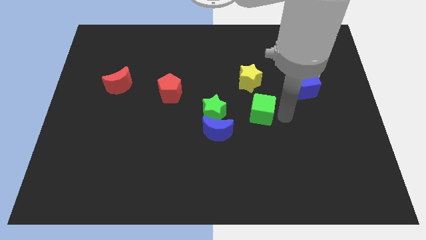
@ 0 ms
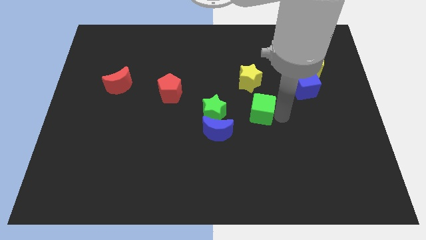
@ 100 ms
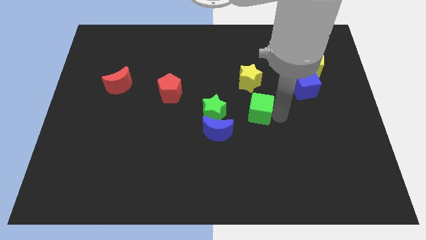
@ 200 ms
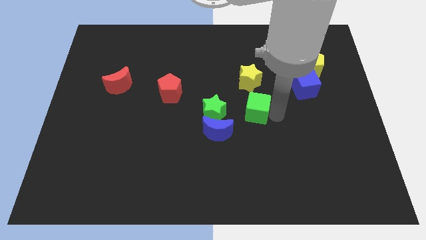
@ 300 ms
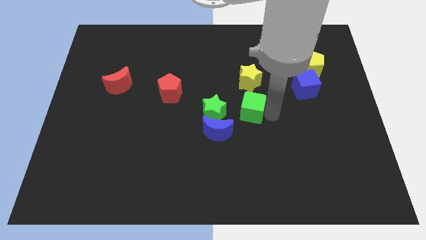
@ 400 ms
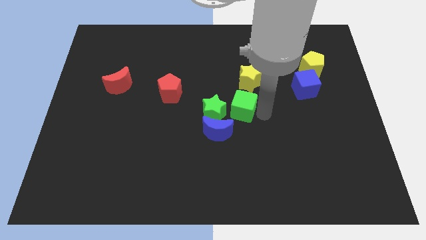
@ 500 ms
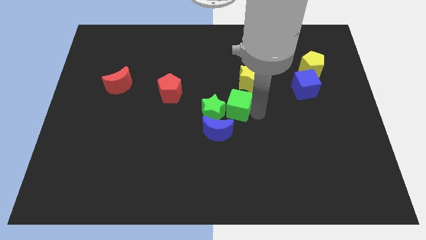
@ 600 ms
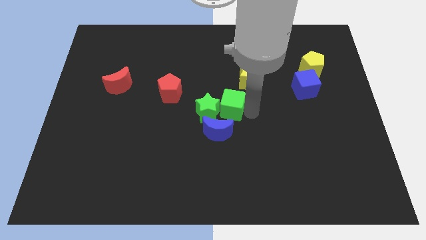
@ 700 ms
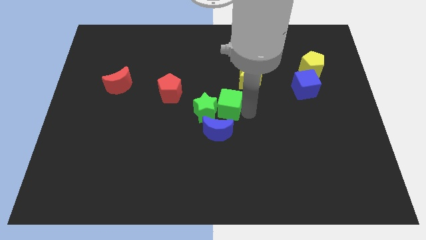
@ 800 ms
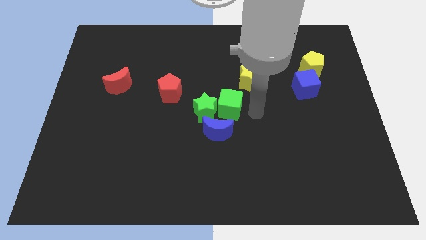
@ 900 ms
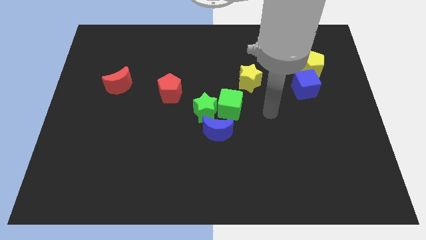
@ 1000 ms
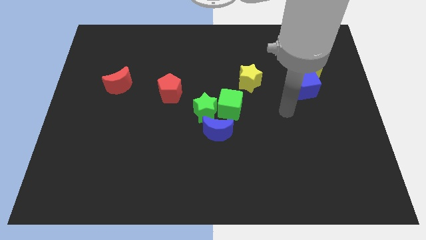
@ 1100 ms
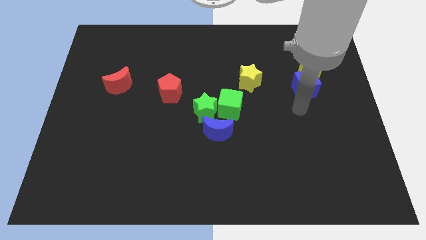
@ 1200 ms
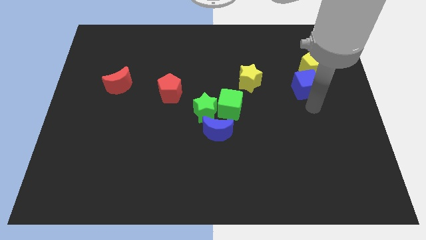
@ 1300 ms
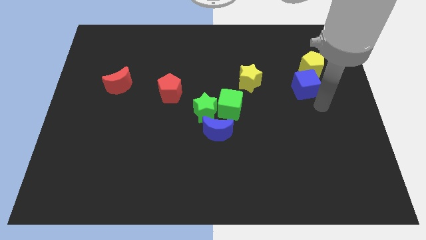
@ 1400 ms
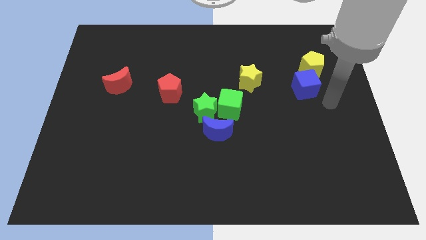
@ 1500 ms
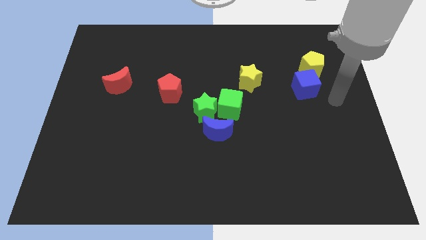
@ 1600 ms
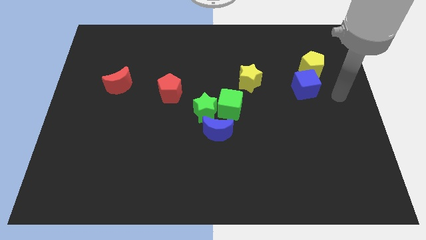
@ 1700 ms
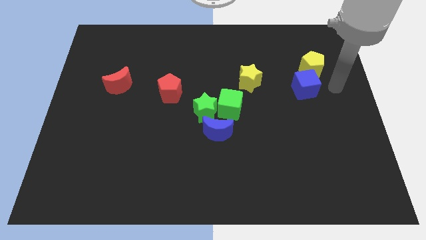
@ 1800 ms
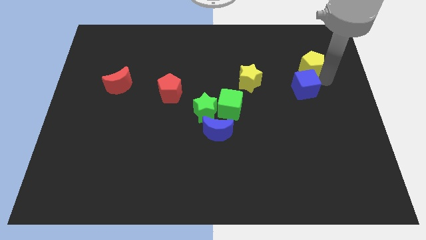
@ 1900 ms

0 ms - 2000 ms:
move the green cube to the left of the green star

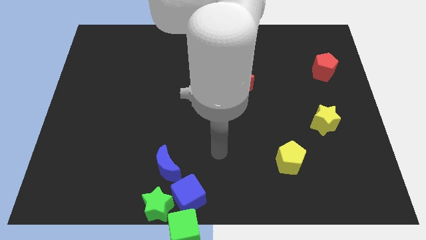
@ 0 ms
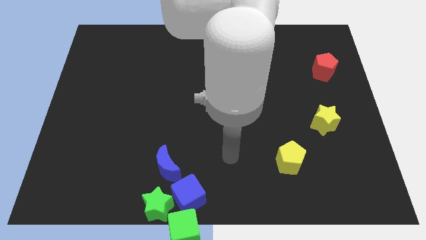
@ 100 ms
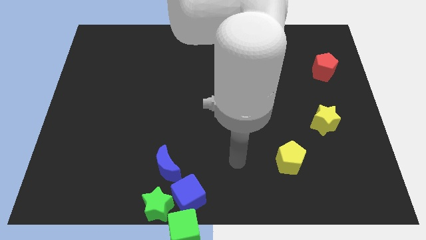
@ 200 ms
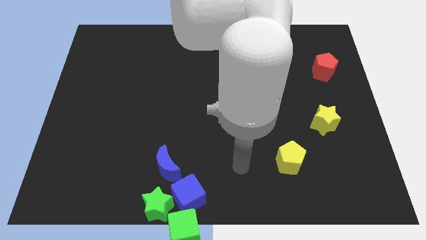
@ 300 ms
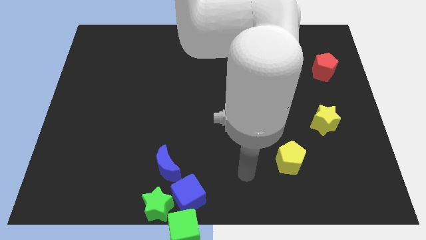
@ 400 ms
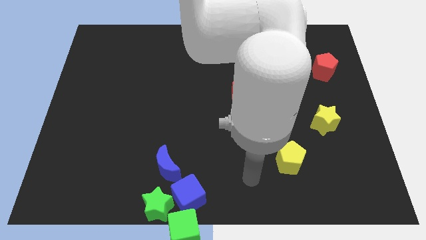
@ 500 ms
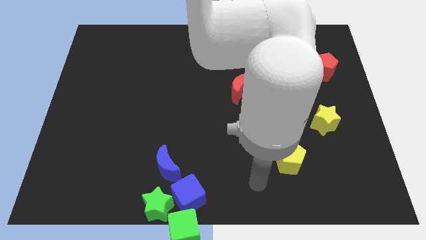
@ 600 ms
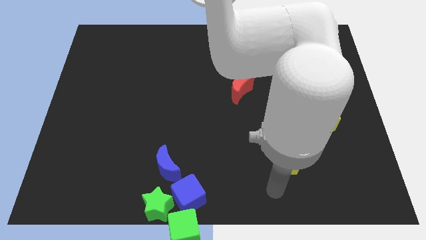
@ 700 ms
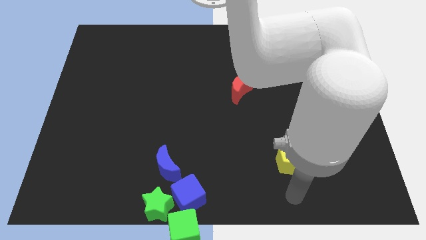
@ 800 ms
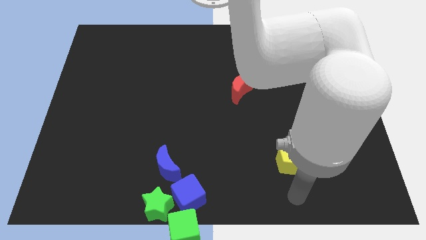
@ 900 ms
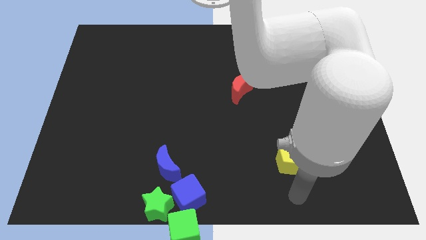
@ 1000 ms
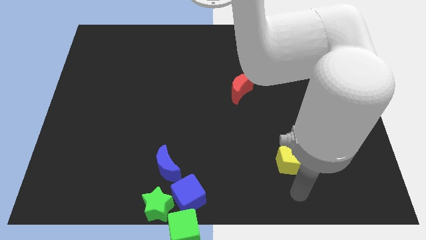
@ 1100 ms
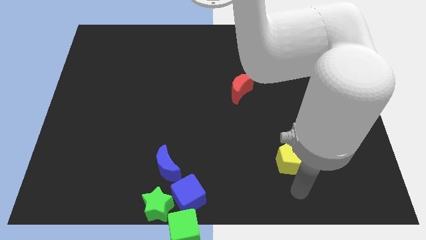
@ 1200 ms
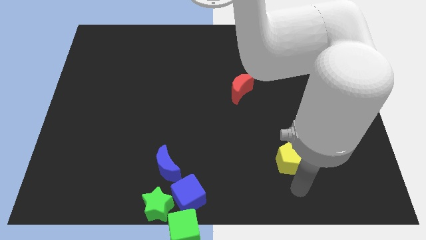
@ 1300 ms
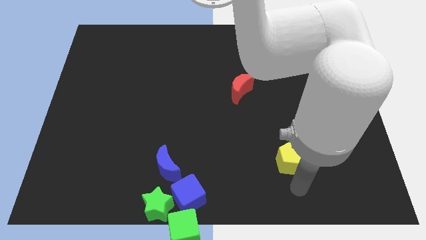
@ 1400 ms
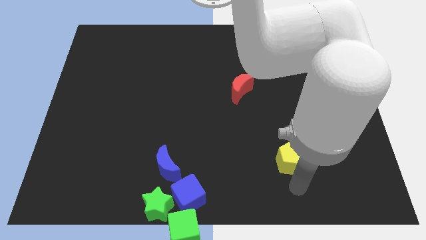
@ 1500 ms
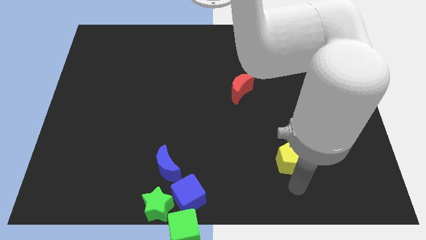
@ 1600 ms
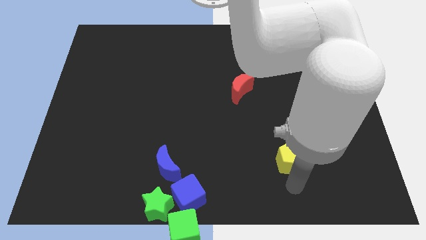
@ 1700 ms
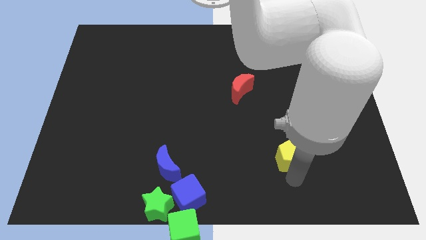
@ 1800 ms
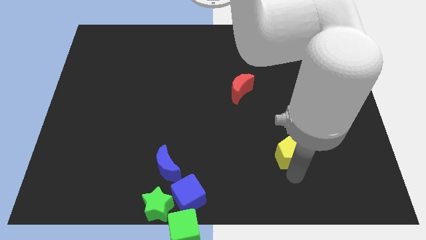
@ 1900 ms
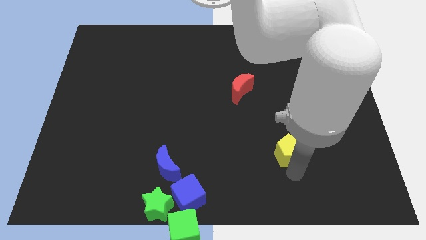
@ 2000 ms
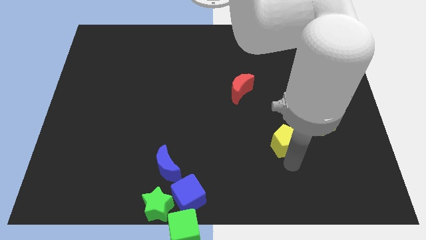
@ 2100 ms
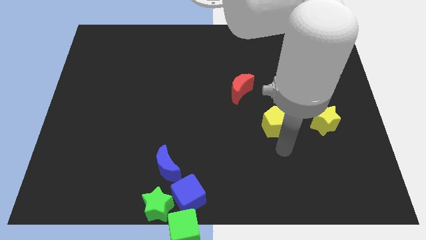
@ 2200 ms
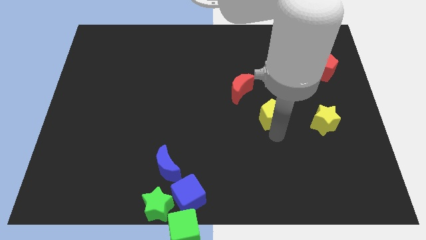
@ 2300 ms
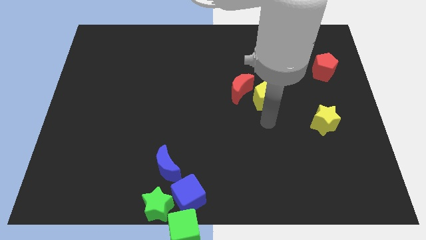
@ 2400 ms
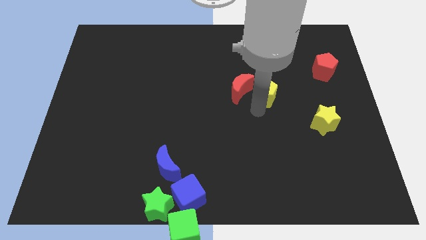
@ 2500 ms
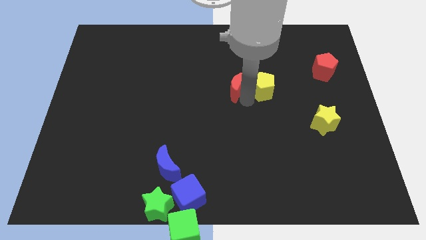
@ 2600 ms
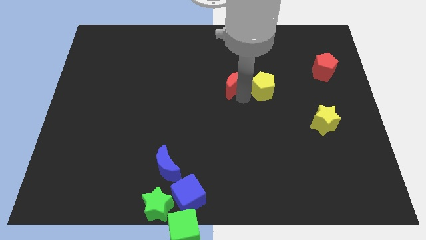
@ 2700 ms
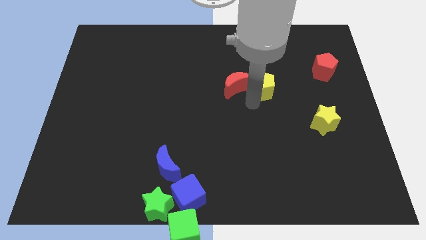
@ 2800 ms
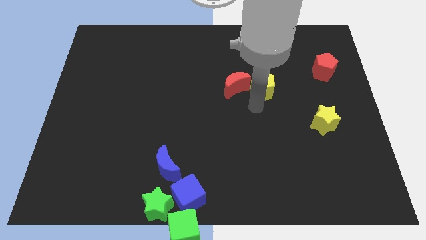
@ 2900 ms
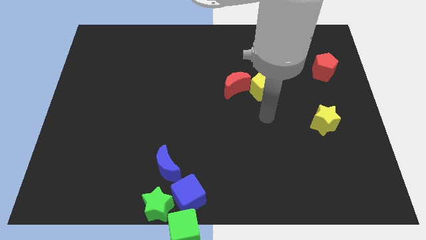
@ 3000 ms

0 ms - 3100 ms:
push the yellow pentagon into red moon

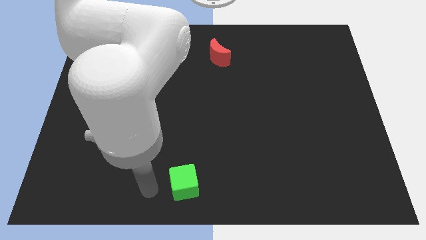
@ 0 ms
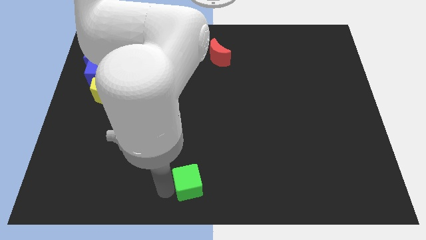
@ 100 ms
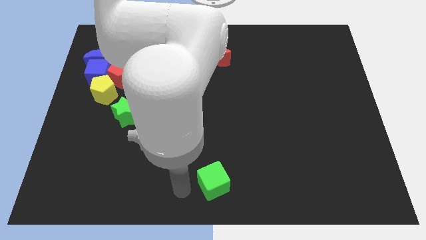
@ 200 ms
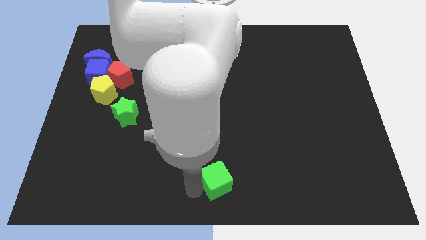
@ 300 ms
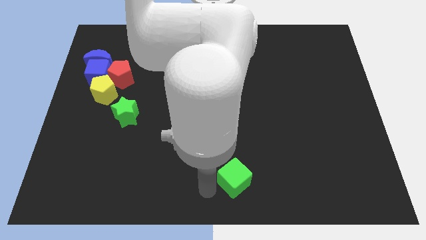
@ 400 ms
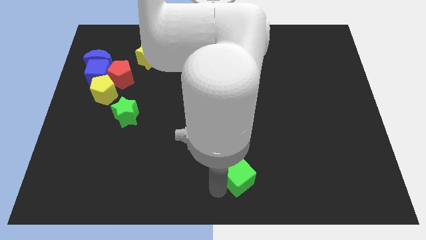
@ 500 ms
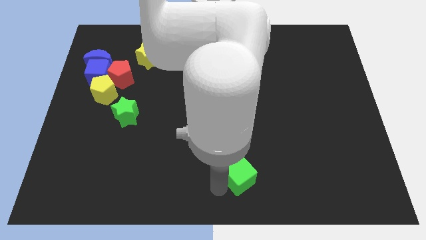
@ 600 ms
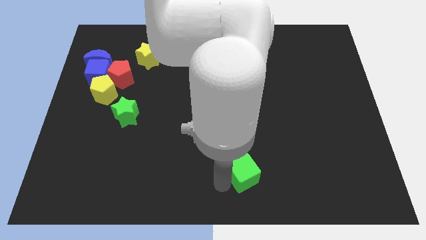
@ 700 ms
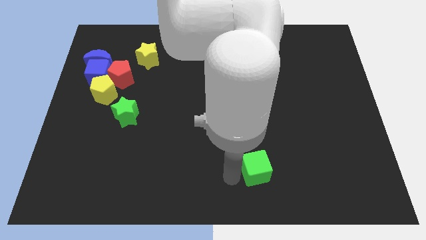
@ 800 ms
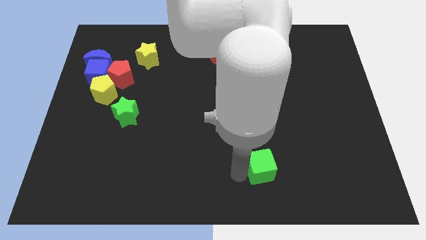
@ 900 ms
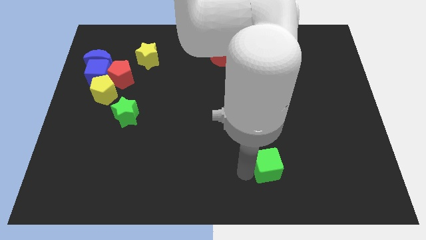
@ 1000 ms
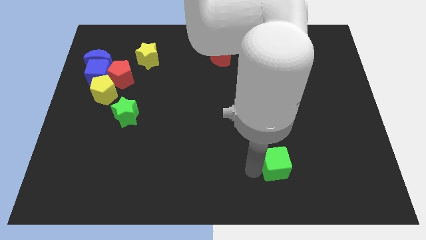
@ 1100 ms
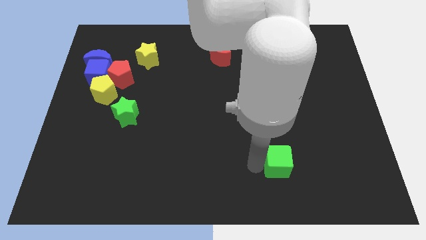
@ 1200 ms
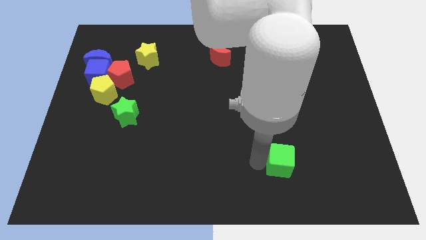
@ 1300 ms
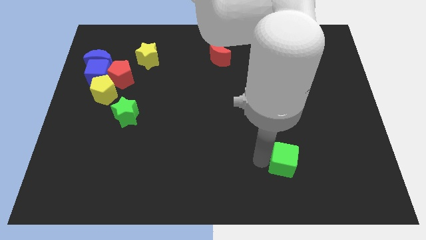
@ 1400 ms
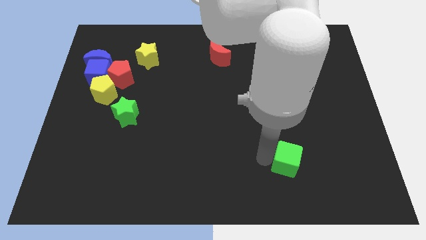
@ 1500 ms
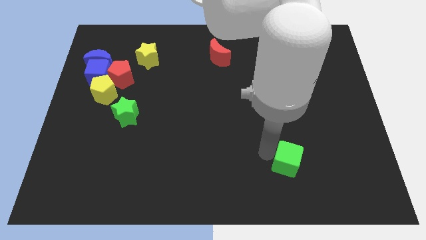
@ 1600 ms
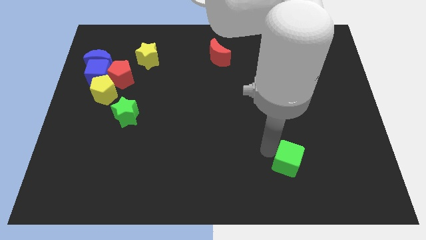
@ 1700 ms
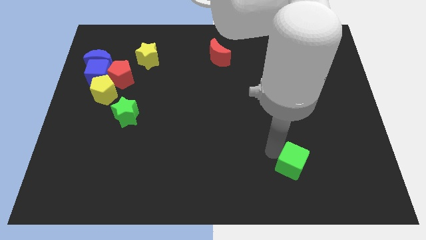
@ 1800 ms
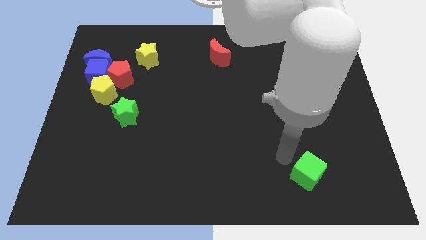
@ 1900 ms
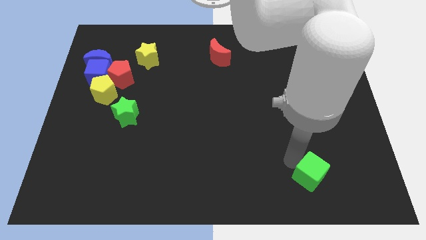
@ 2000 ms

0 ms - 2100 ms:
push the green cube to the right side of the board

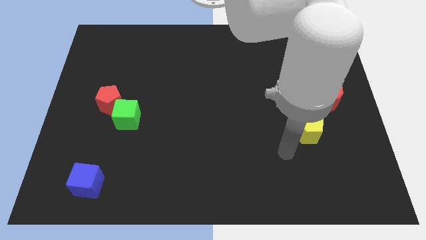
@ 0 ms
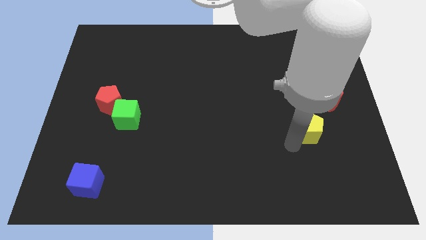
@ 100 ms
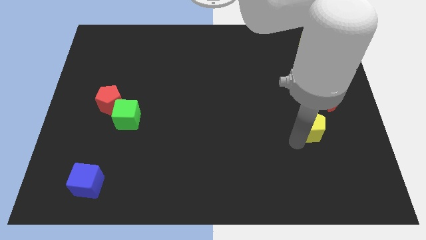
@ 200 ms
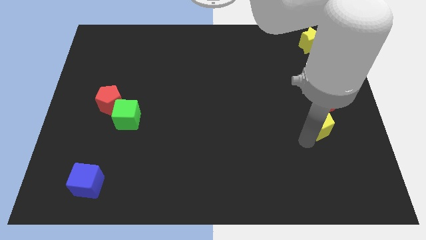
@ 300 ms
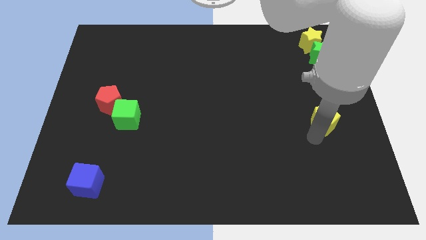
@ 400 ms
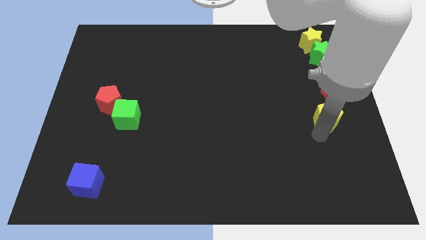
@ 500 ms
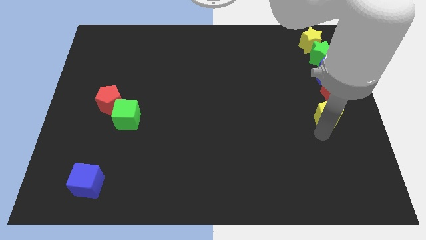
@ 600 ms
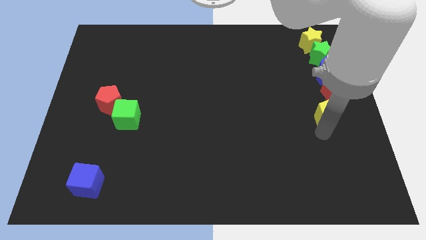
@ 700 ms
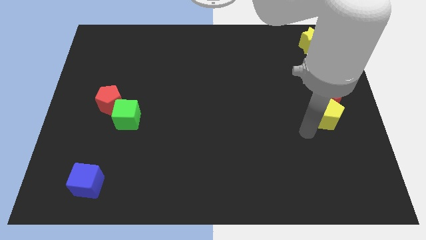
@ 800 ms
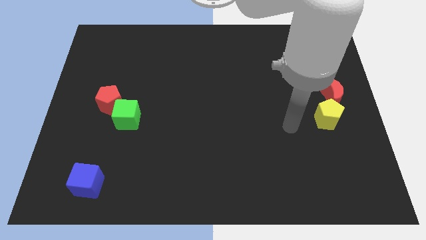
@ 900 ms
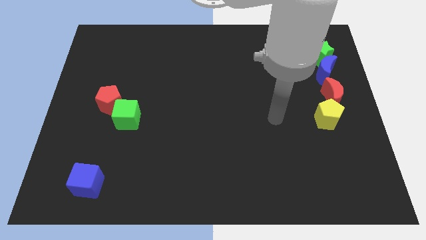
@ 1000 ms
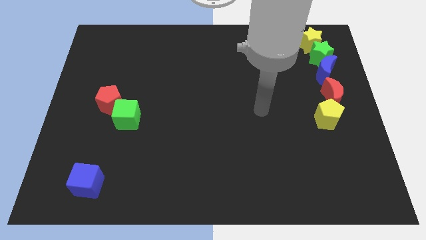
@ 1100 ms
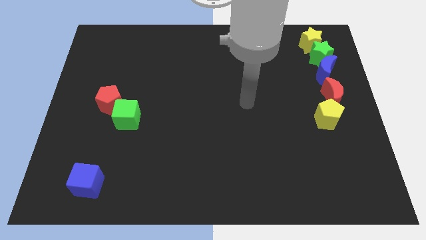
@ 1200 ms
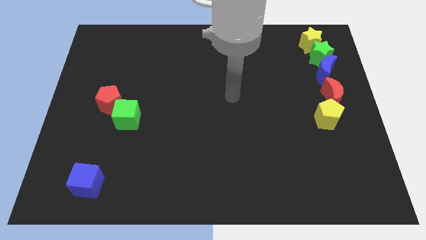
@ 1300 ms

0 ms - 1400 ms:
place the yellow pentagon below the red crescent

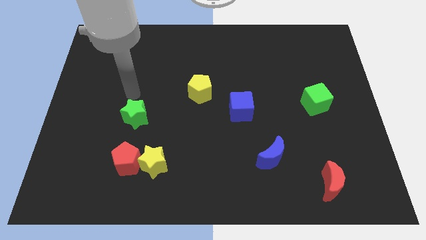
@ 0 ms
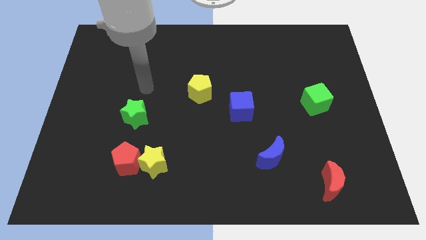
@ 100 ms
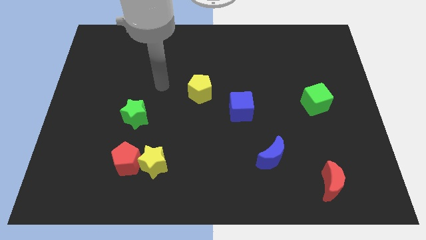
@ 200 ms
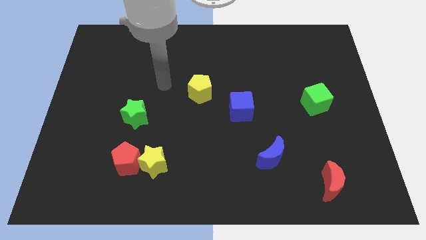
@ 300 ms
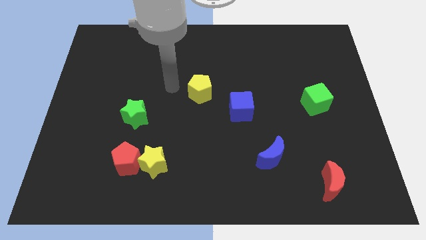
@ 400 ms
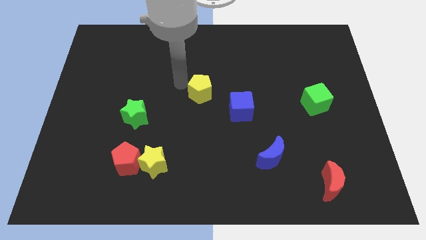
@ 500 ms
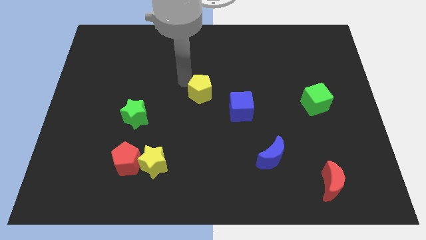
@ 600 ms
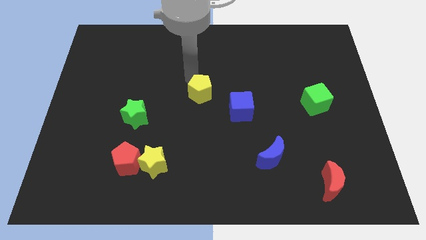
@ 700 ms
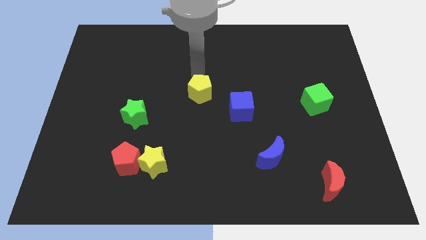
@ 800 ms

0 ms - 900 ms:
move the arm above the yellow pentagon
